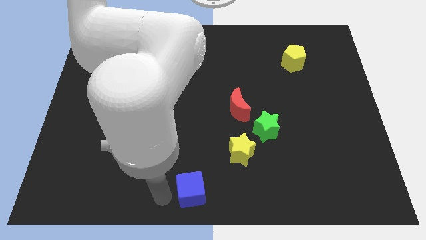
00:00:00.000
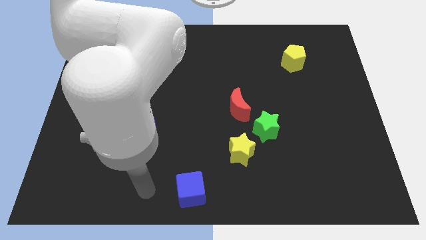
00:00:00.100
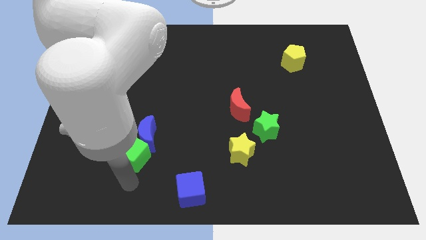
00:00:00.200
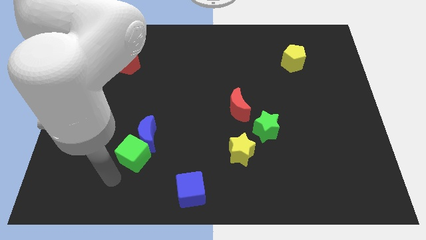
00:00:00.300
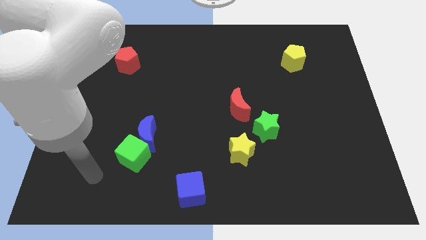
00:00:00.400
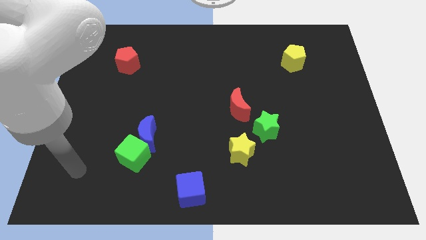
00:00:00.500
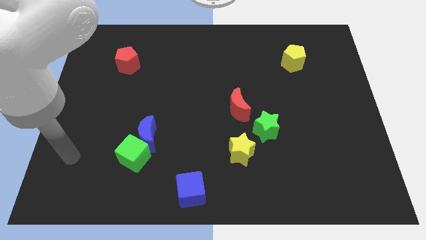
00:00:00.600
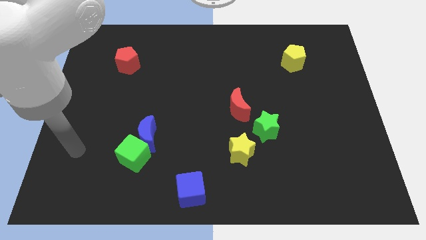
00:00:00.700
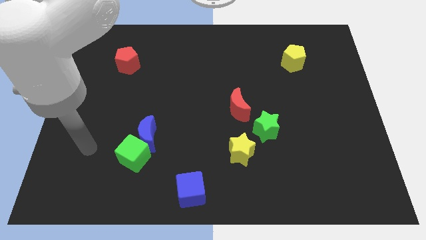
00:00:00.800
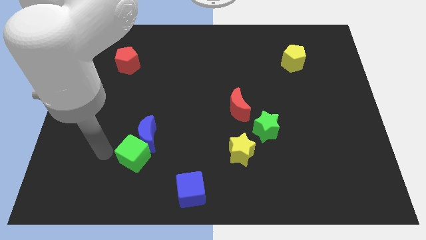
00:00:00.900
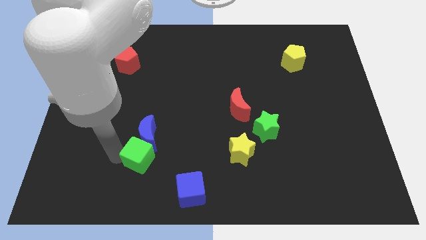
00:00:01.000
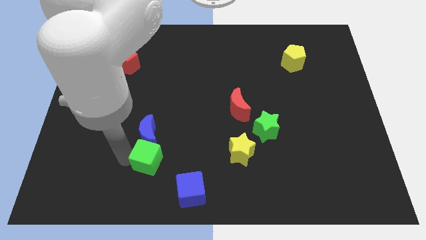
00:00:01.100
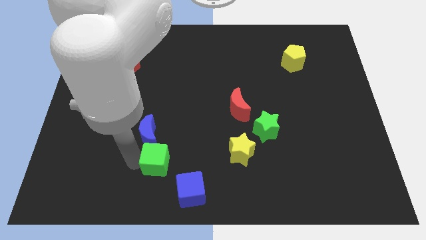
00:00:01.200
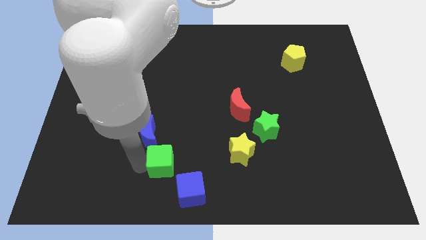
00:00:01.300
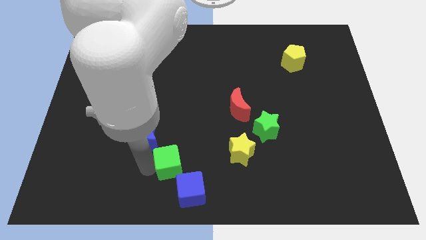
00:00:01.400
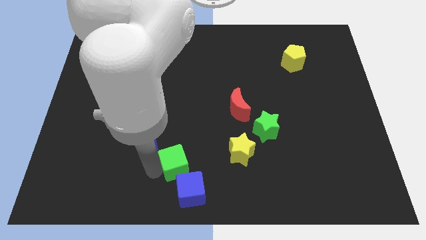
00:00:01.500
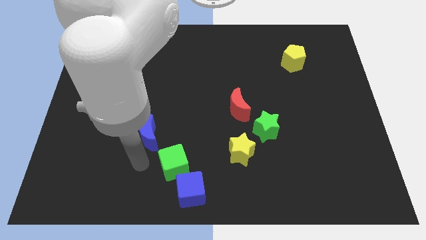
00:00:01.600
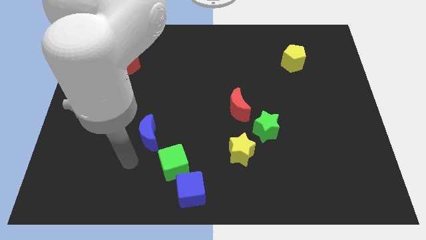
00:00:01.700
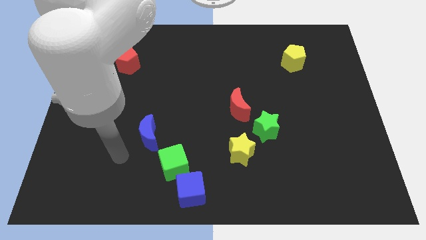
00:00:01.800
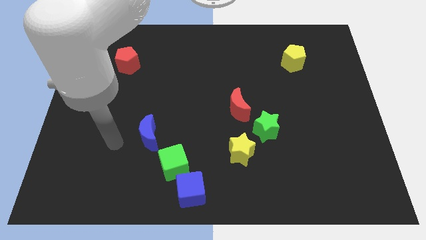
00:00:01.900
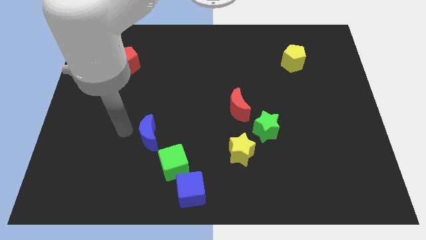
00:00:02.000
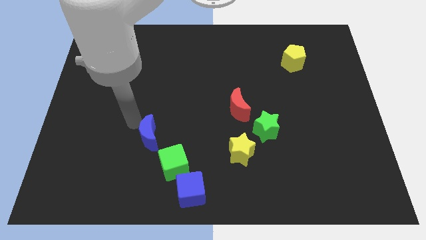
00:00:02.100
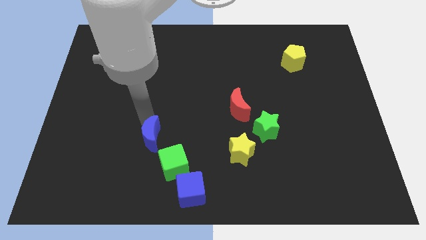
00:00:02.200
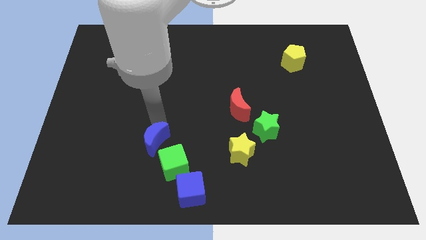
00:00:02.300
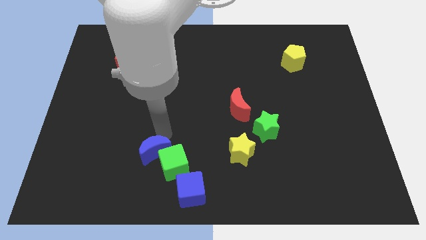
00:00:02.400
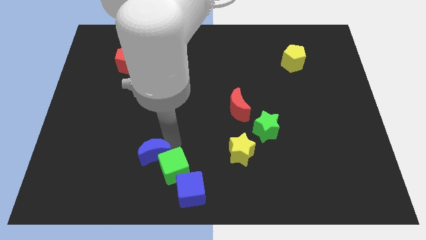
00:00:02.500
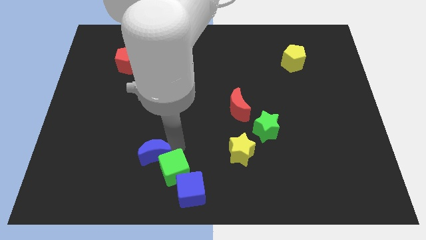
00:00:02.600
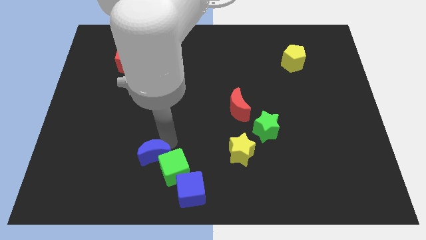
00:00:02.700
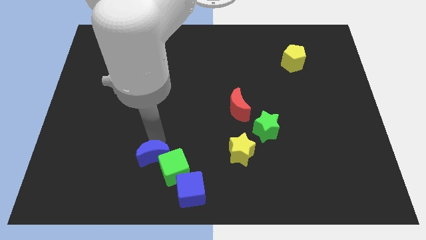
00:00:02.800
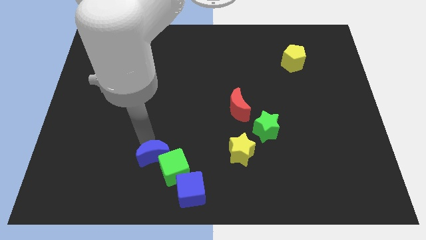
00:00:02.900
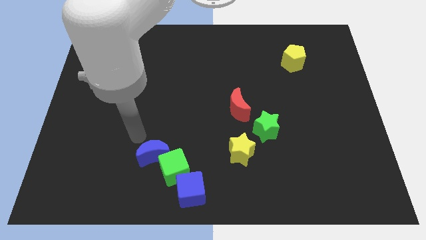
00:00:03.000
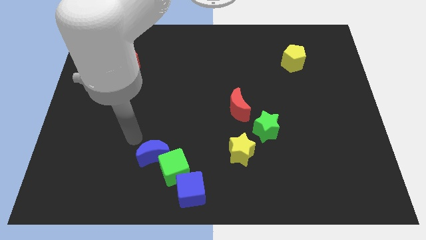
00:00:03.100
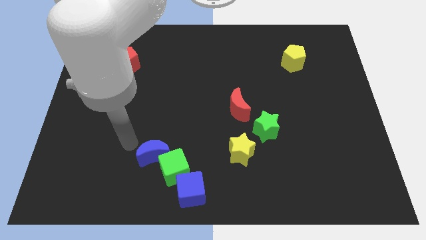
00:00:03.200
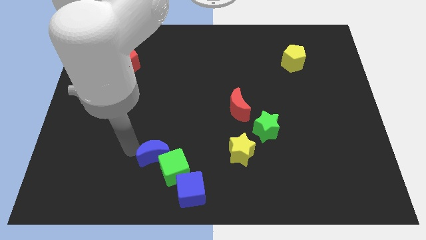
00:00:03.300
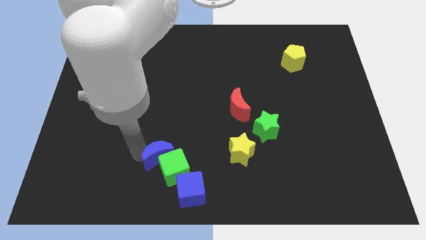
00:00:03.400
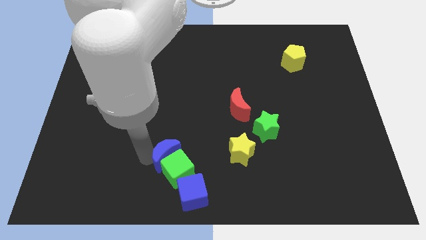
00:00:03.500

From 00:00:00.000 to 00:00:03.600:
push the green cube and blue moon to the top of the blue cube

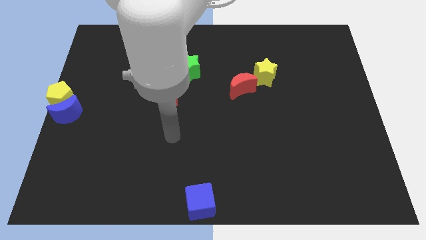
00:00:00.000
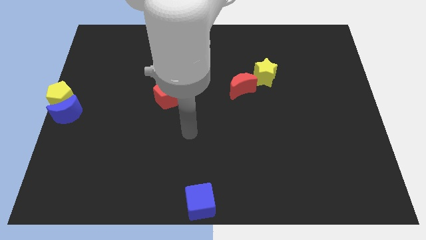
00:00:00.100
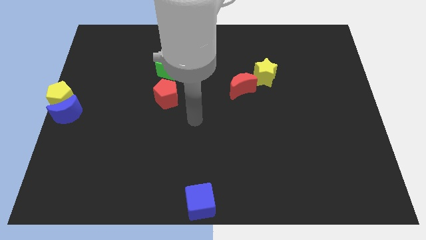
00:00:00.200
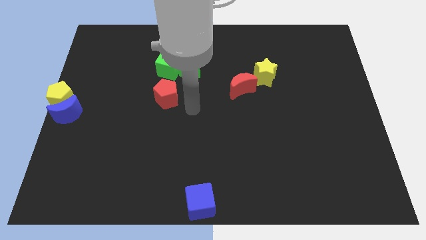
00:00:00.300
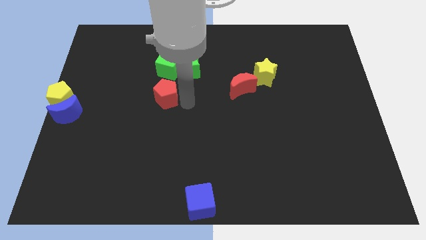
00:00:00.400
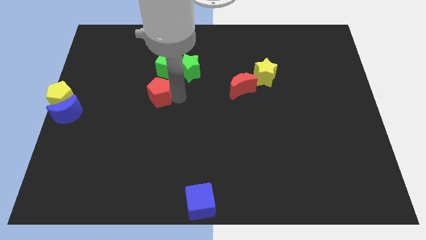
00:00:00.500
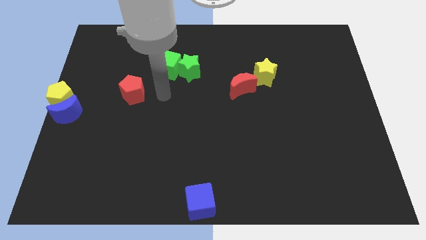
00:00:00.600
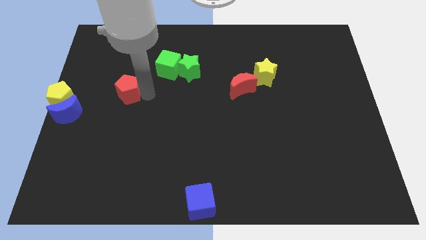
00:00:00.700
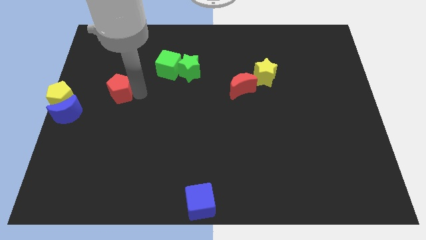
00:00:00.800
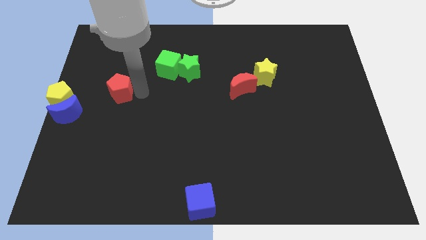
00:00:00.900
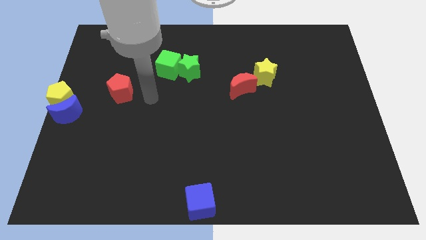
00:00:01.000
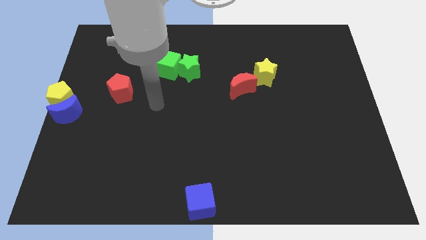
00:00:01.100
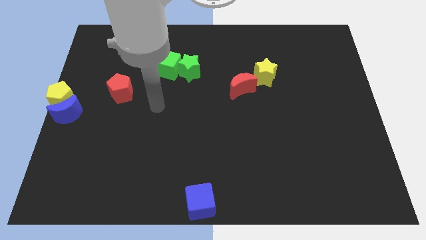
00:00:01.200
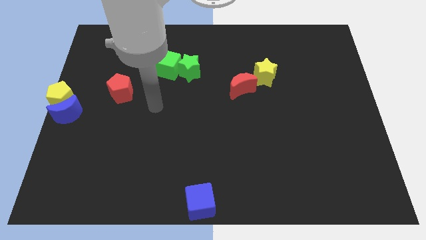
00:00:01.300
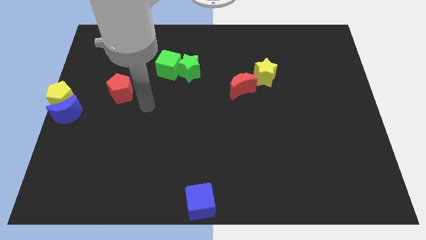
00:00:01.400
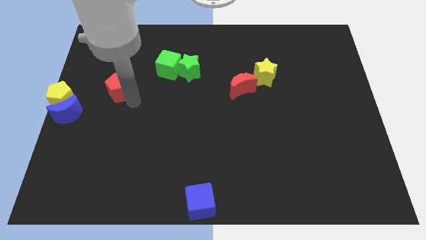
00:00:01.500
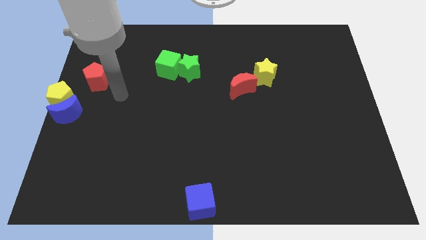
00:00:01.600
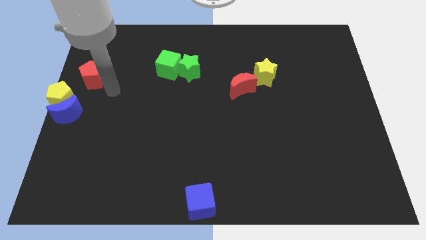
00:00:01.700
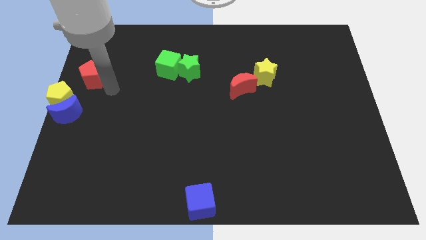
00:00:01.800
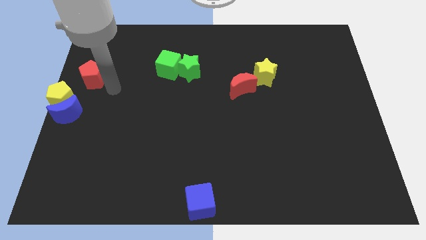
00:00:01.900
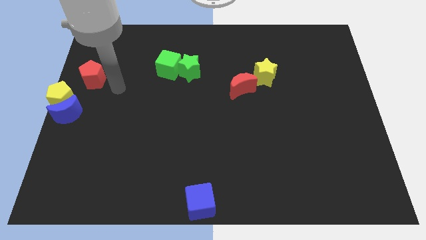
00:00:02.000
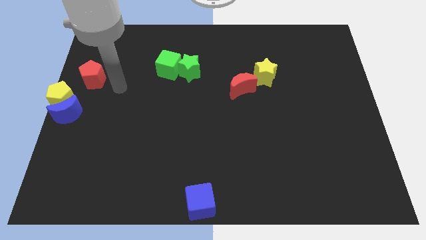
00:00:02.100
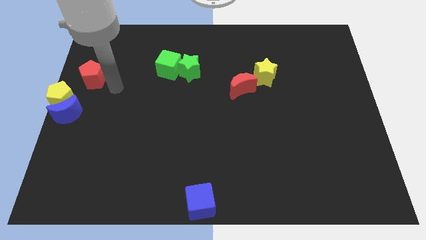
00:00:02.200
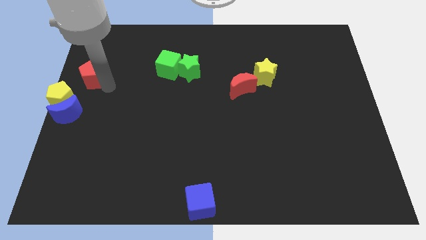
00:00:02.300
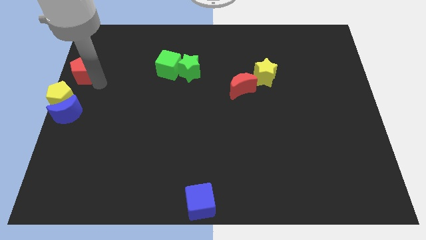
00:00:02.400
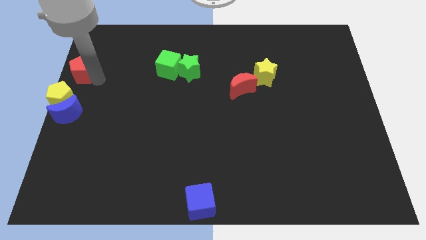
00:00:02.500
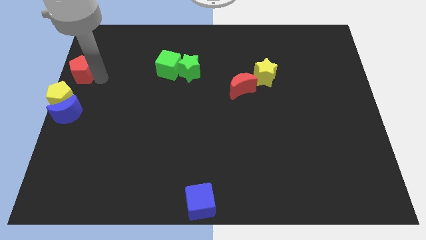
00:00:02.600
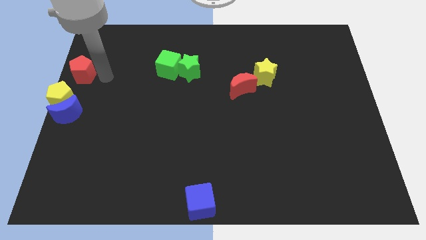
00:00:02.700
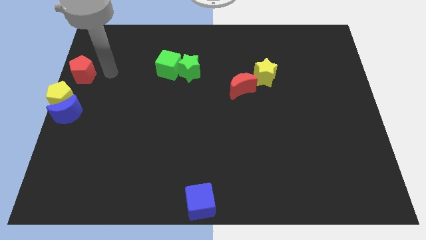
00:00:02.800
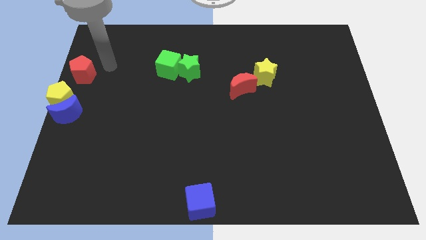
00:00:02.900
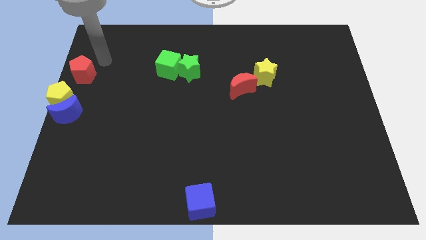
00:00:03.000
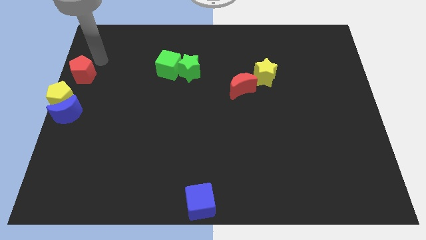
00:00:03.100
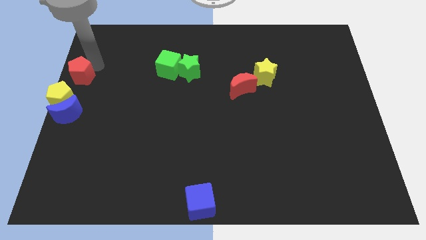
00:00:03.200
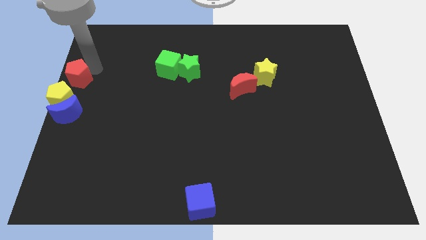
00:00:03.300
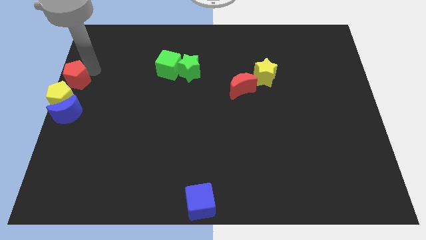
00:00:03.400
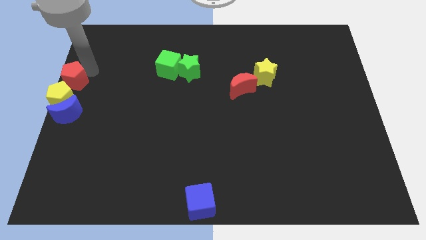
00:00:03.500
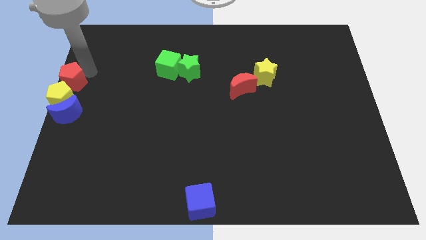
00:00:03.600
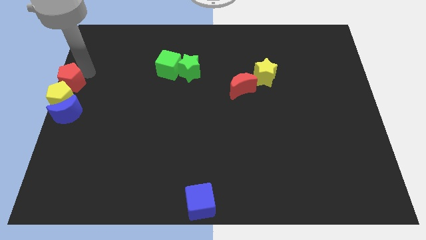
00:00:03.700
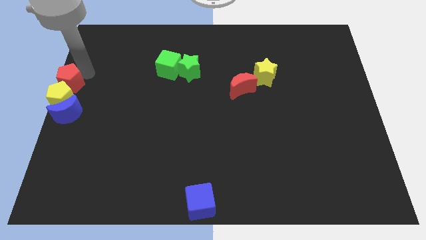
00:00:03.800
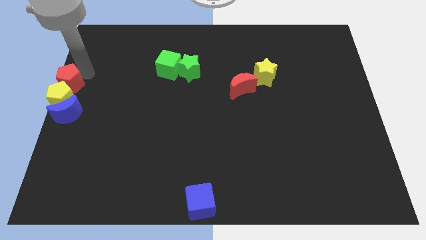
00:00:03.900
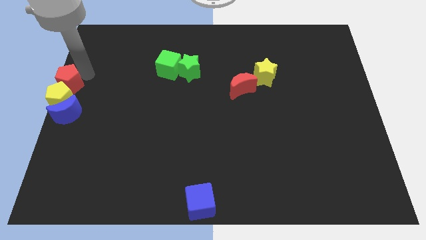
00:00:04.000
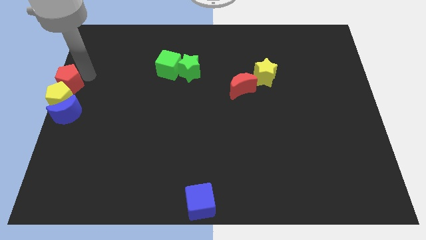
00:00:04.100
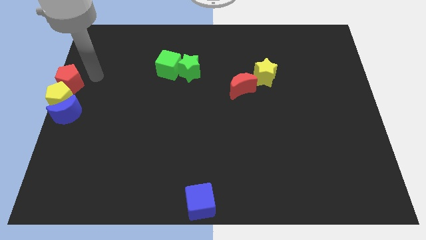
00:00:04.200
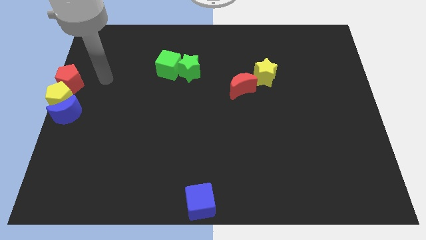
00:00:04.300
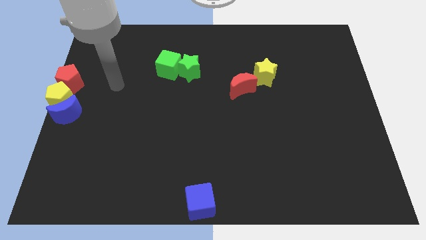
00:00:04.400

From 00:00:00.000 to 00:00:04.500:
push the red pentagon to the top of the yellow pentagon

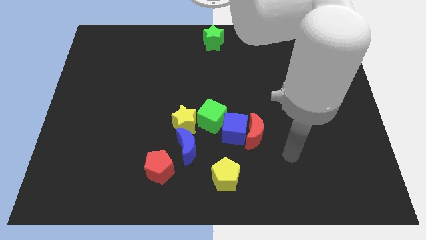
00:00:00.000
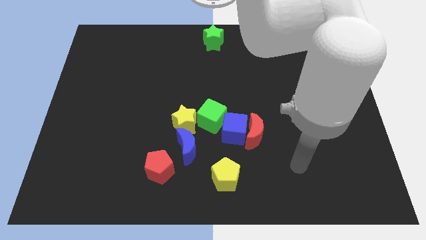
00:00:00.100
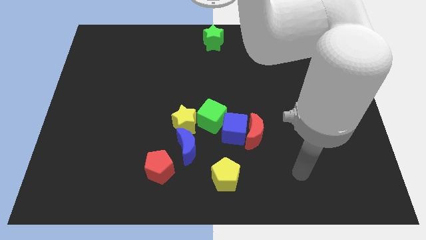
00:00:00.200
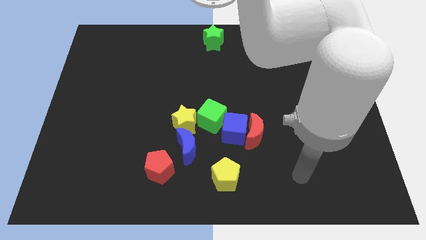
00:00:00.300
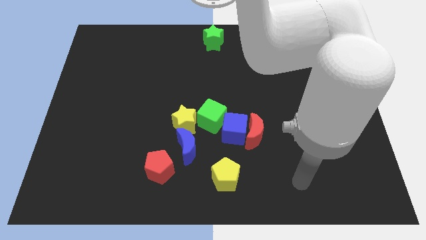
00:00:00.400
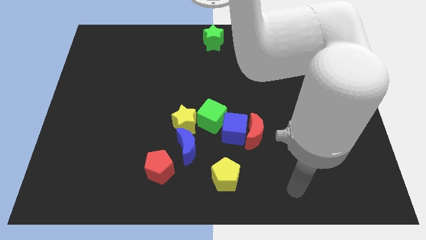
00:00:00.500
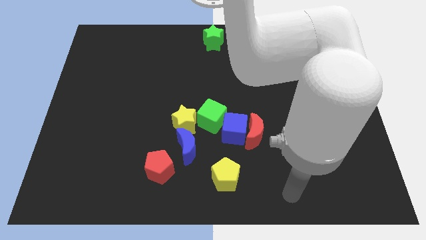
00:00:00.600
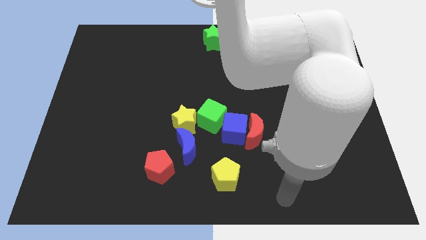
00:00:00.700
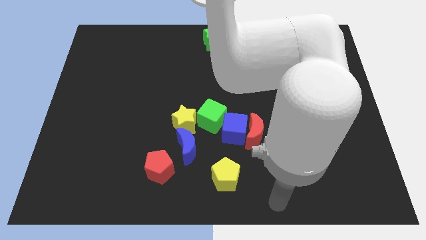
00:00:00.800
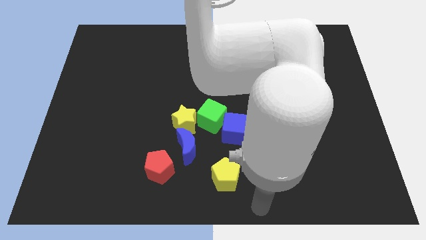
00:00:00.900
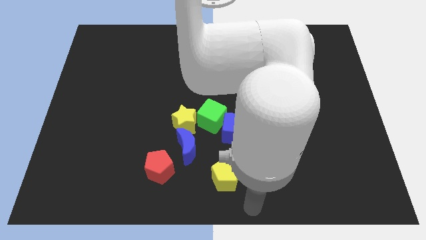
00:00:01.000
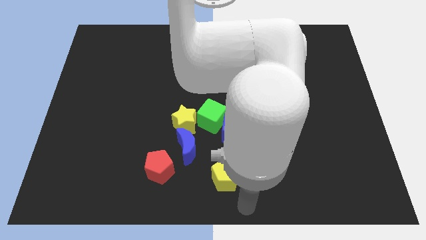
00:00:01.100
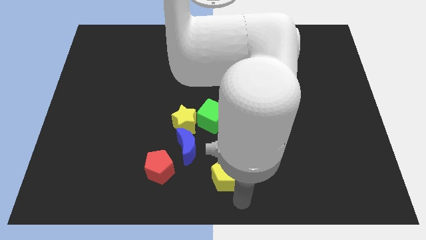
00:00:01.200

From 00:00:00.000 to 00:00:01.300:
move the arm down to the yellow pentagon
